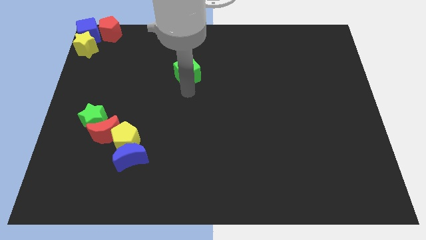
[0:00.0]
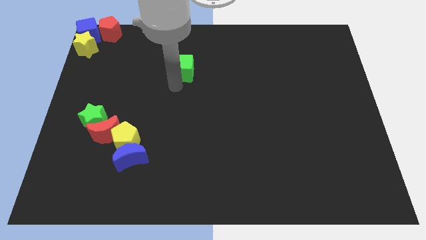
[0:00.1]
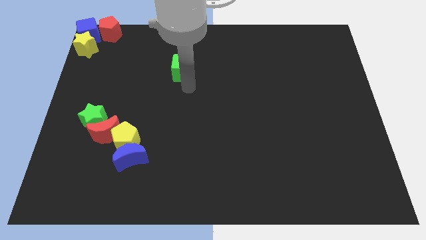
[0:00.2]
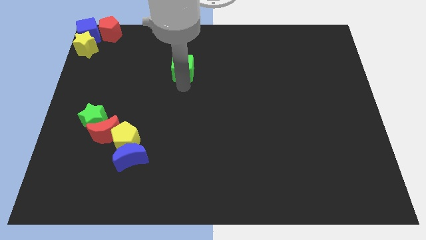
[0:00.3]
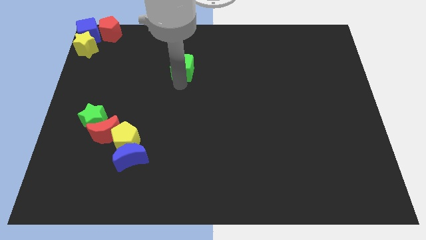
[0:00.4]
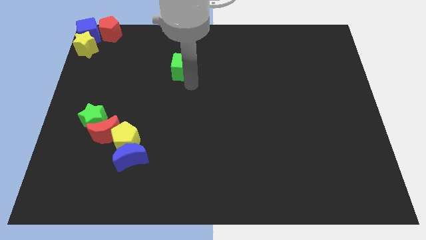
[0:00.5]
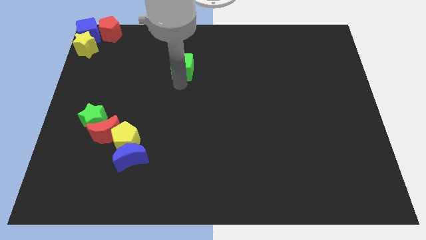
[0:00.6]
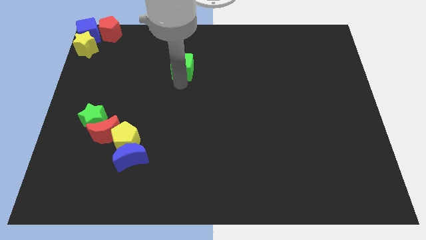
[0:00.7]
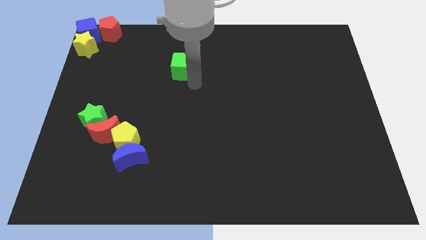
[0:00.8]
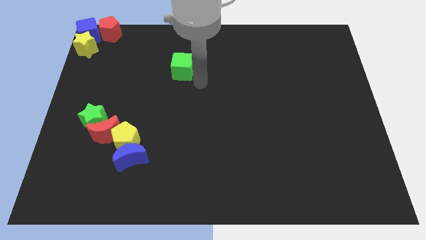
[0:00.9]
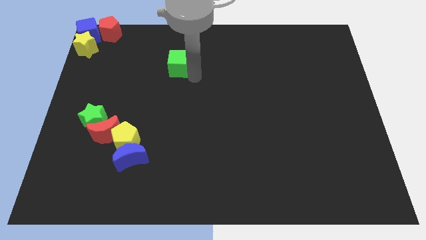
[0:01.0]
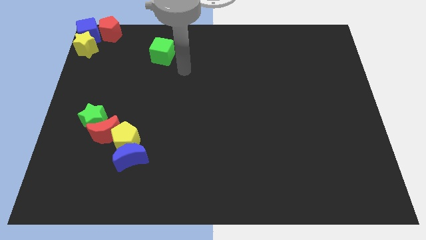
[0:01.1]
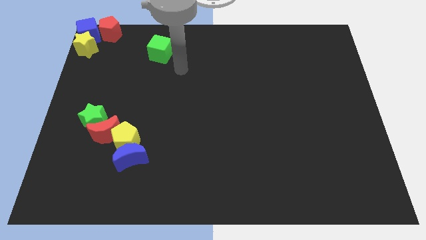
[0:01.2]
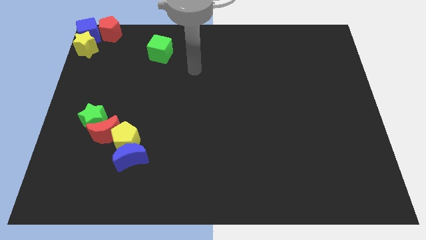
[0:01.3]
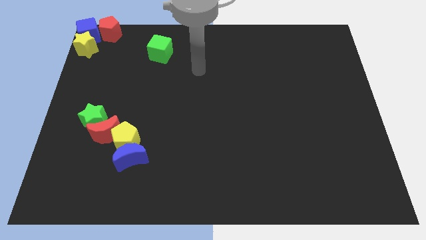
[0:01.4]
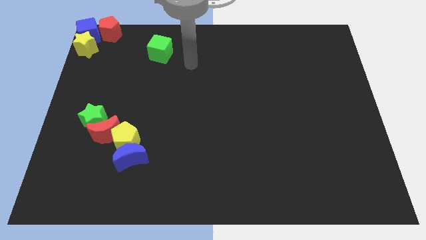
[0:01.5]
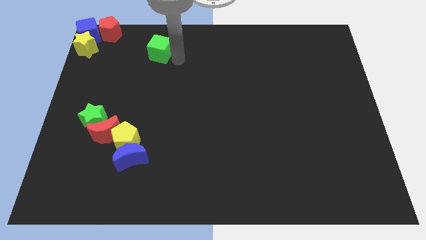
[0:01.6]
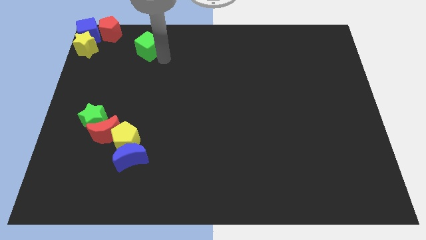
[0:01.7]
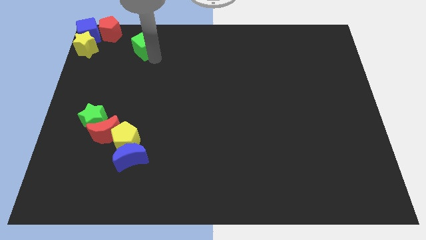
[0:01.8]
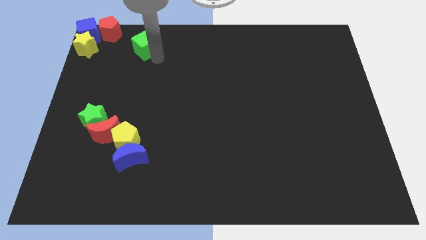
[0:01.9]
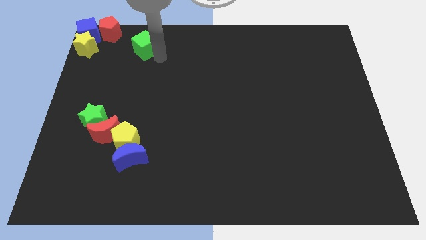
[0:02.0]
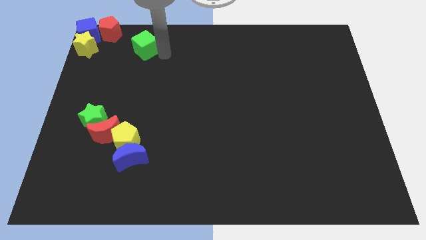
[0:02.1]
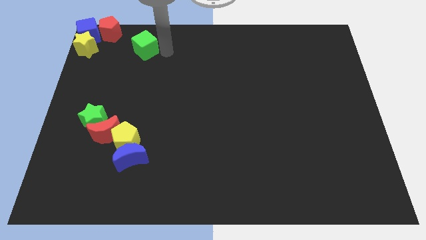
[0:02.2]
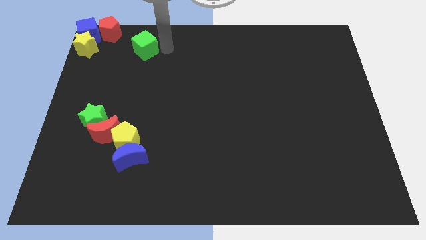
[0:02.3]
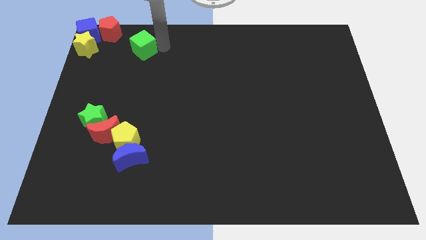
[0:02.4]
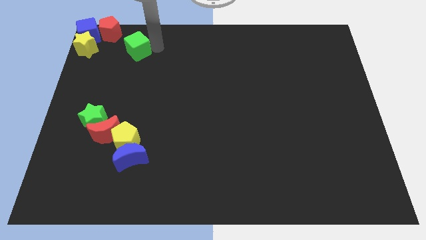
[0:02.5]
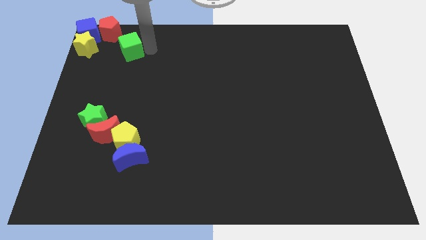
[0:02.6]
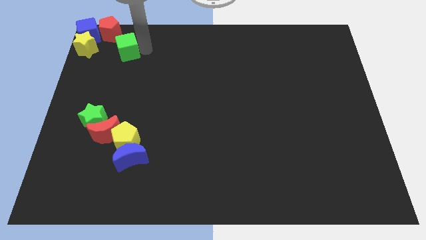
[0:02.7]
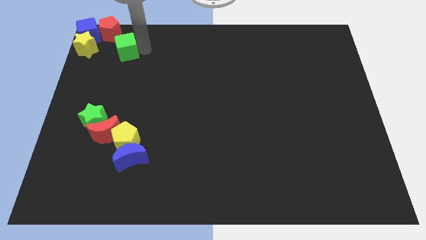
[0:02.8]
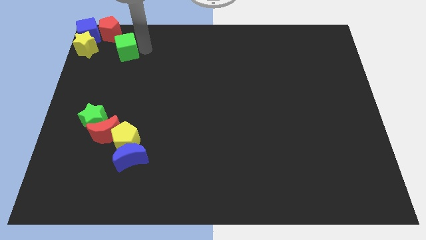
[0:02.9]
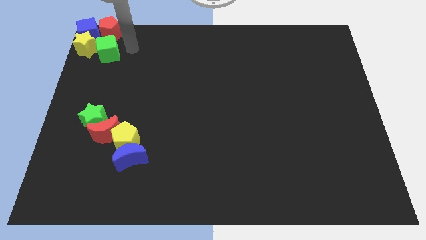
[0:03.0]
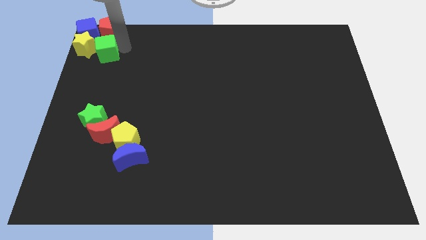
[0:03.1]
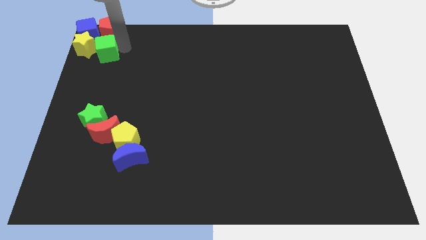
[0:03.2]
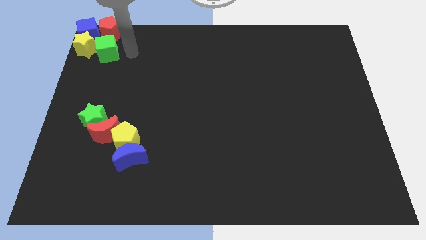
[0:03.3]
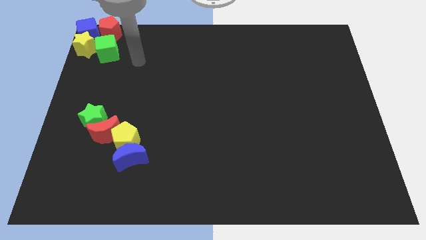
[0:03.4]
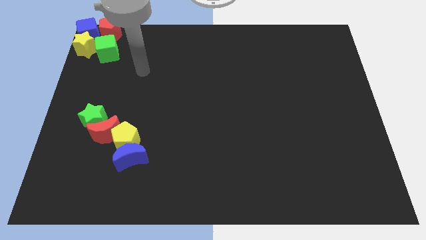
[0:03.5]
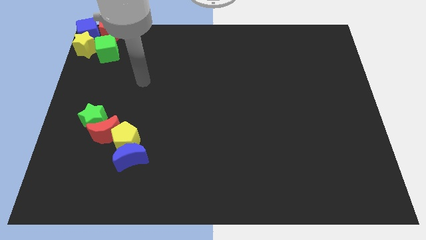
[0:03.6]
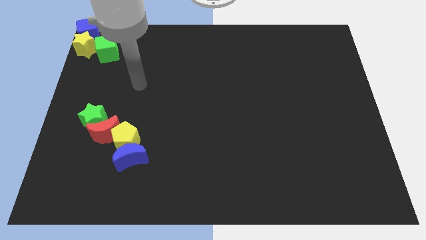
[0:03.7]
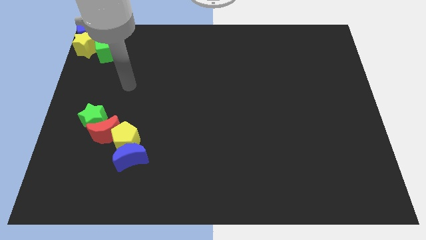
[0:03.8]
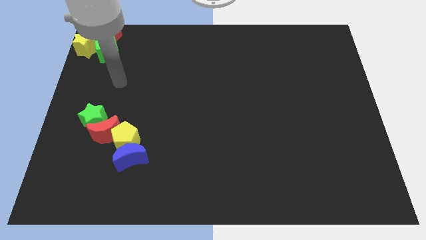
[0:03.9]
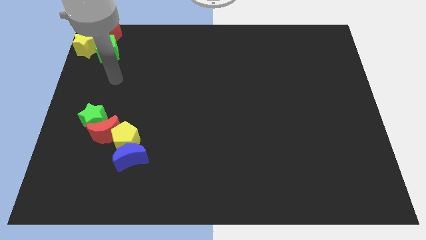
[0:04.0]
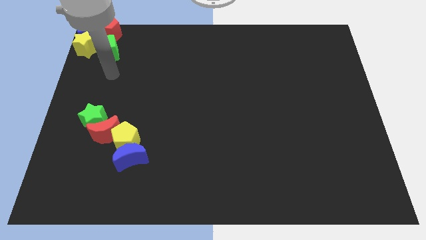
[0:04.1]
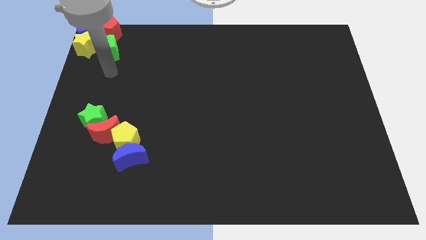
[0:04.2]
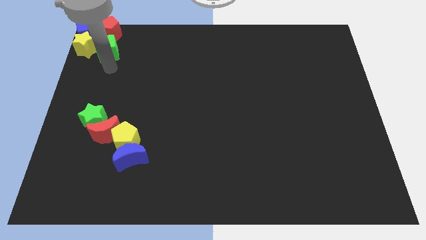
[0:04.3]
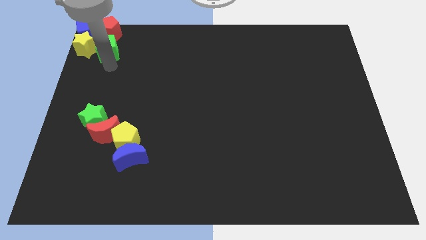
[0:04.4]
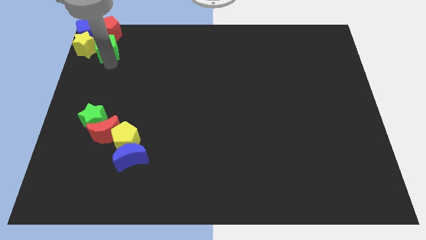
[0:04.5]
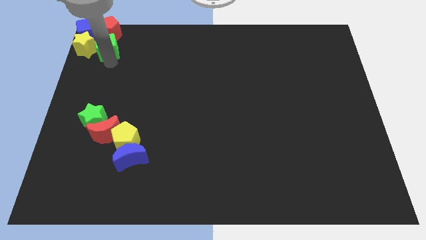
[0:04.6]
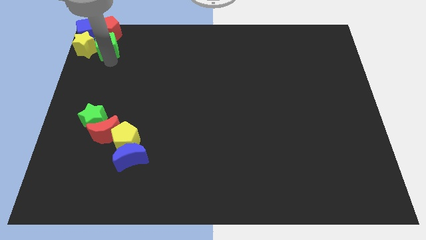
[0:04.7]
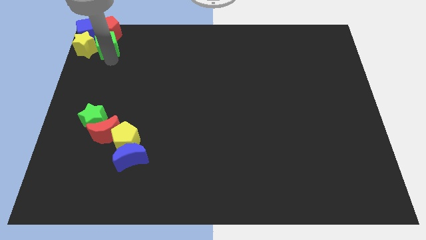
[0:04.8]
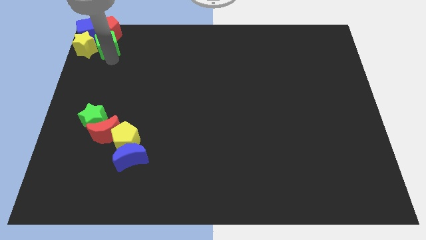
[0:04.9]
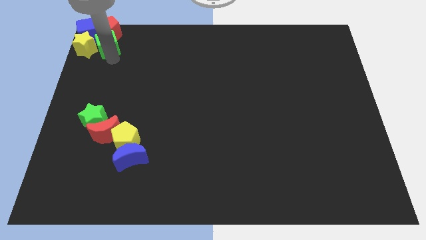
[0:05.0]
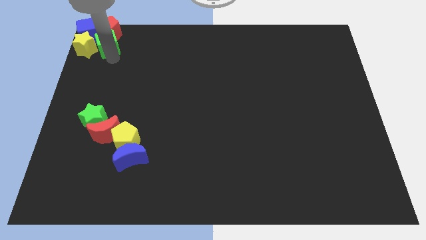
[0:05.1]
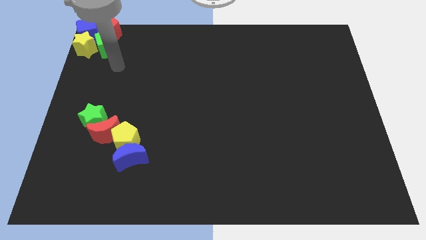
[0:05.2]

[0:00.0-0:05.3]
move the green cube into the group of blocks at the top left corner of the table

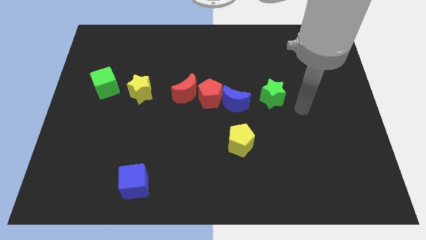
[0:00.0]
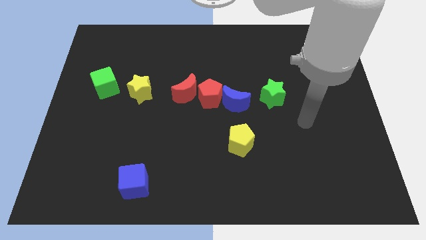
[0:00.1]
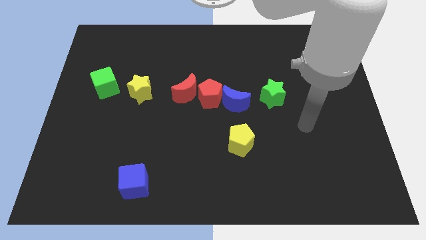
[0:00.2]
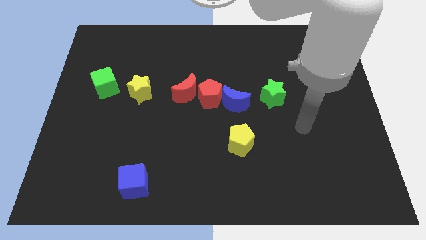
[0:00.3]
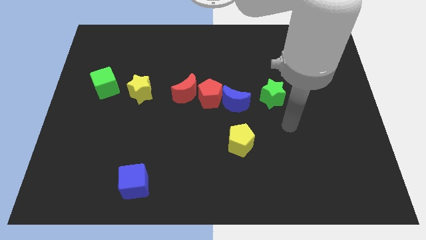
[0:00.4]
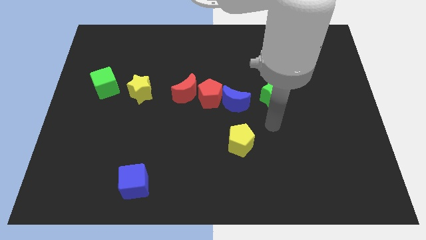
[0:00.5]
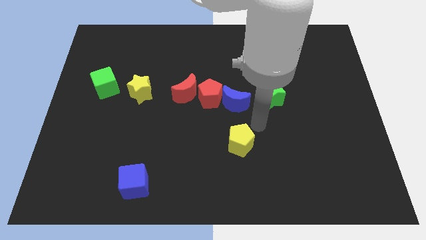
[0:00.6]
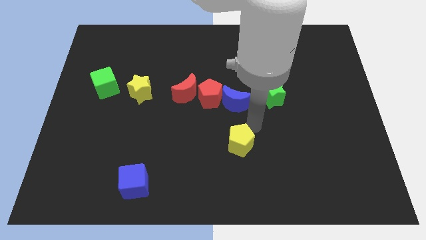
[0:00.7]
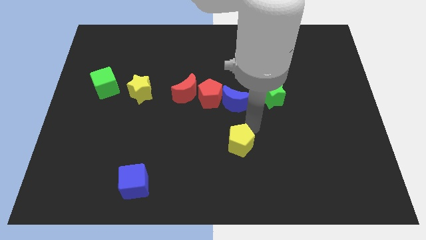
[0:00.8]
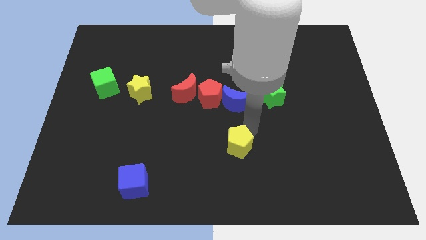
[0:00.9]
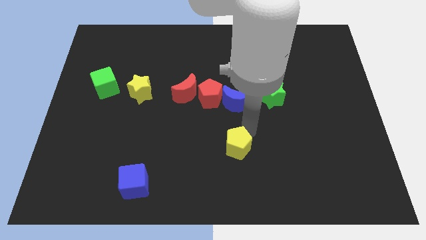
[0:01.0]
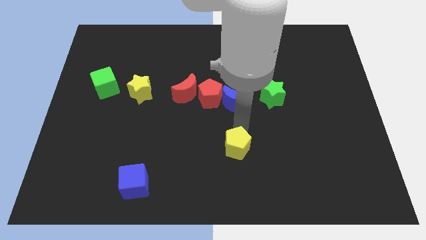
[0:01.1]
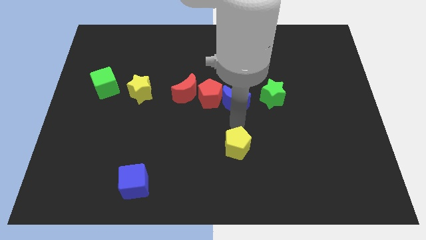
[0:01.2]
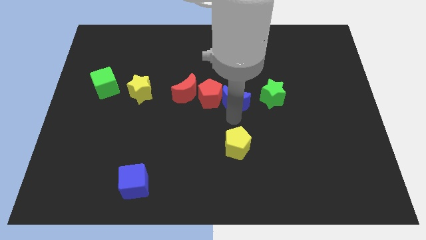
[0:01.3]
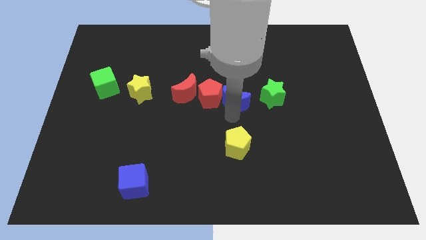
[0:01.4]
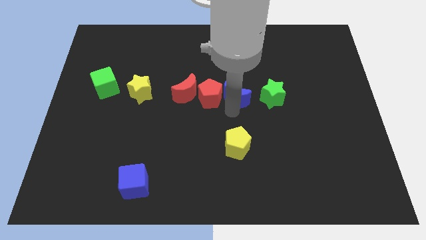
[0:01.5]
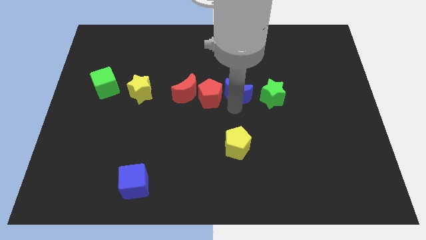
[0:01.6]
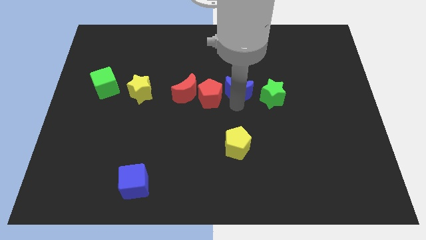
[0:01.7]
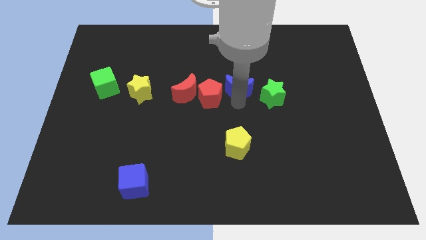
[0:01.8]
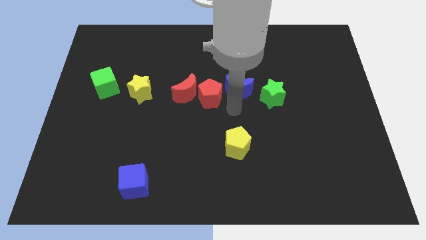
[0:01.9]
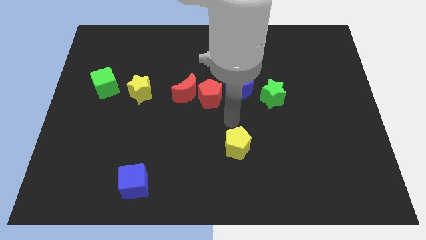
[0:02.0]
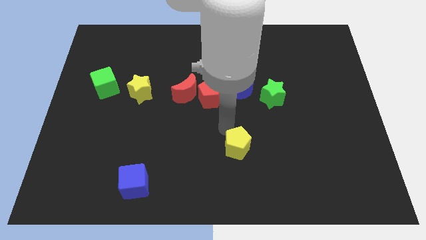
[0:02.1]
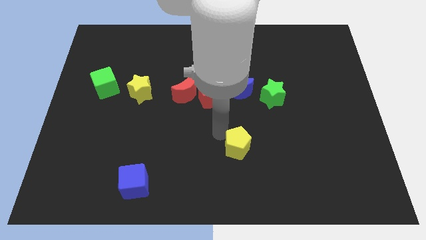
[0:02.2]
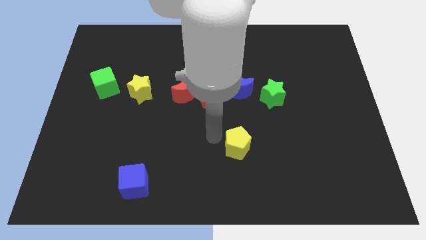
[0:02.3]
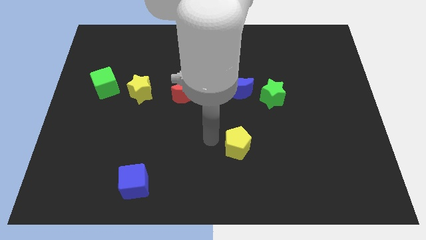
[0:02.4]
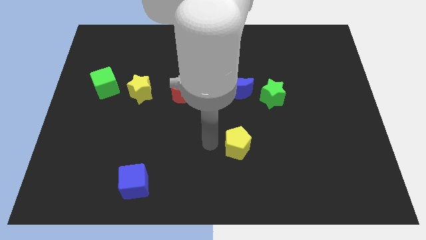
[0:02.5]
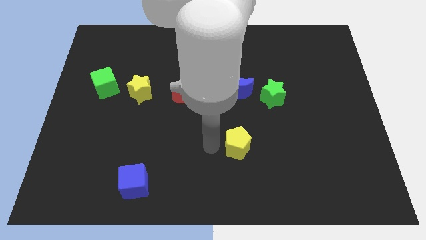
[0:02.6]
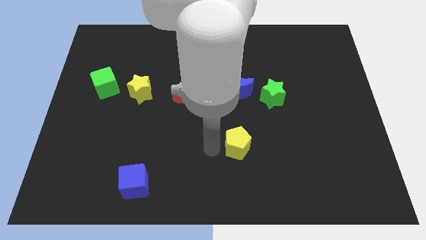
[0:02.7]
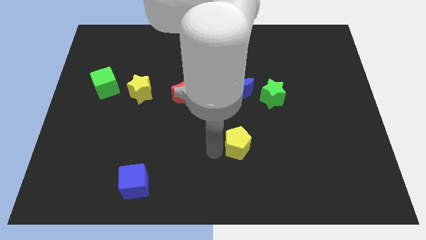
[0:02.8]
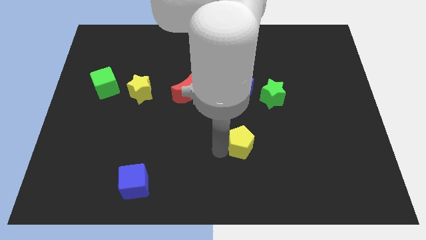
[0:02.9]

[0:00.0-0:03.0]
tap the left side of the yellow pentagon

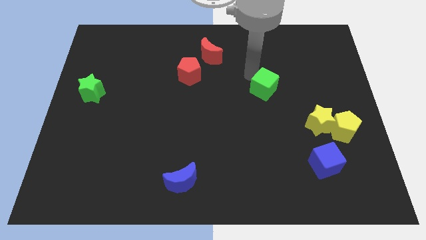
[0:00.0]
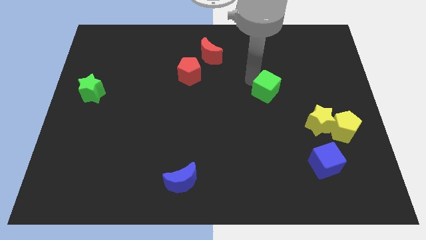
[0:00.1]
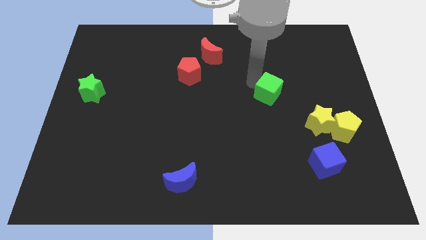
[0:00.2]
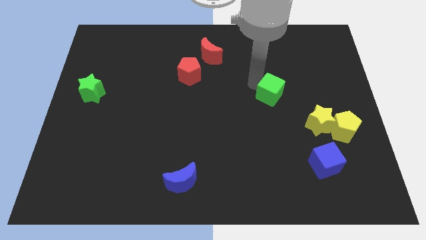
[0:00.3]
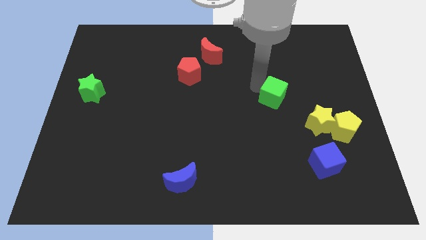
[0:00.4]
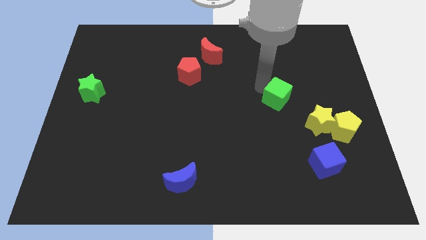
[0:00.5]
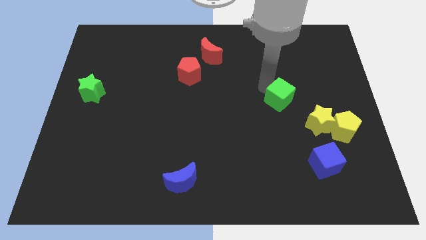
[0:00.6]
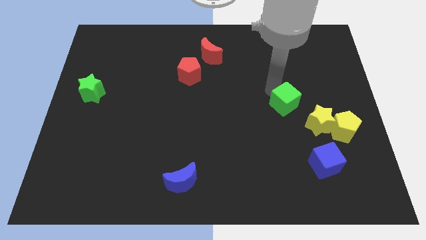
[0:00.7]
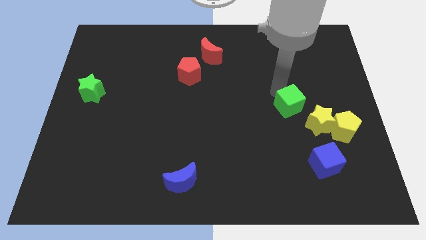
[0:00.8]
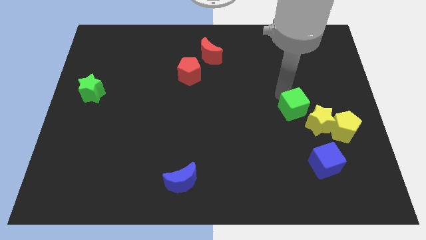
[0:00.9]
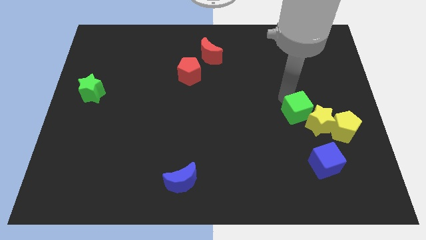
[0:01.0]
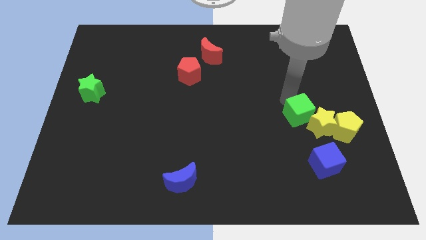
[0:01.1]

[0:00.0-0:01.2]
move green cube into the yellow star
